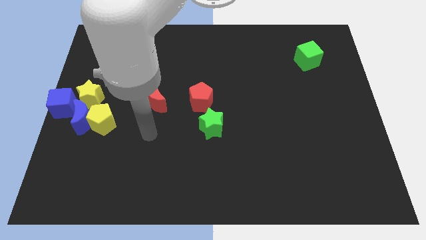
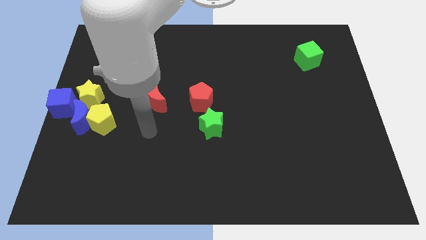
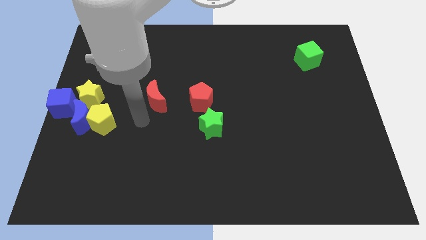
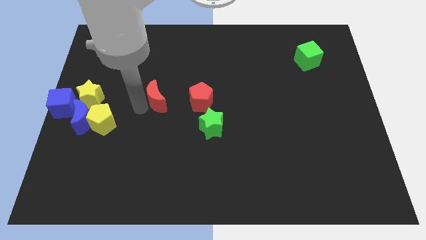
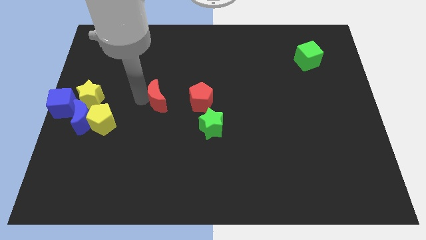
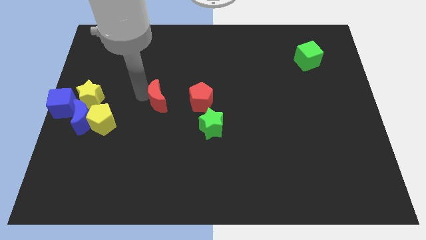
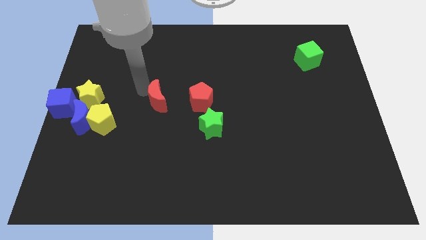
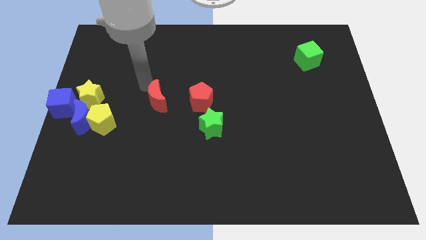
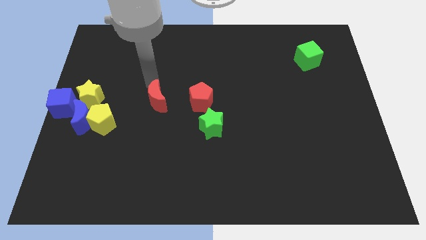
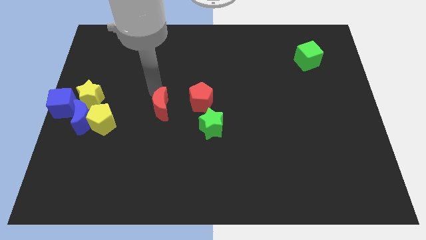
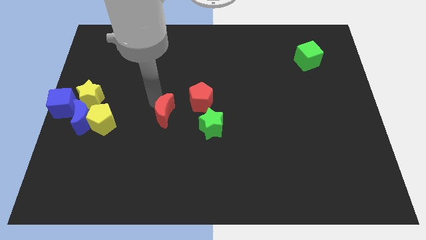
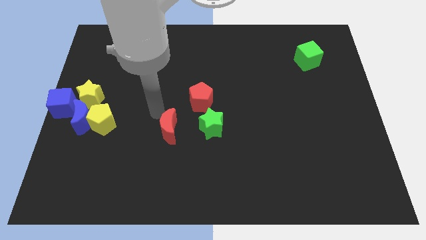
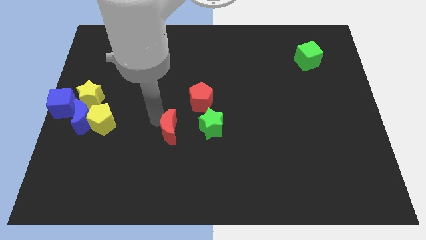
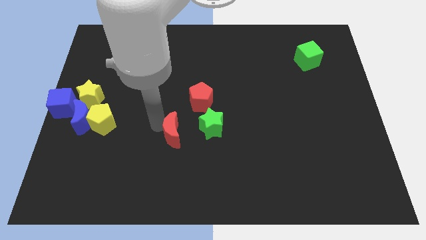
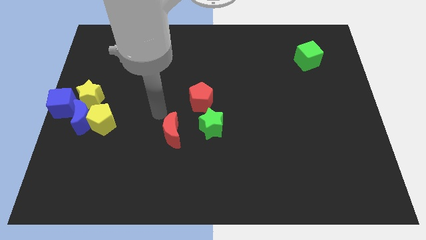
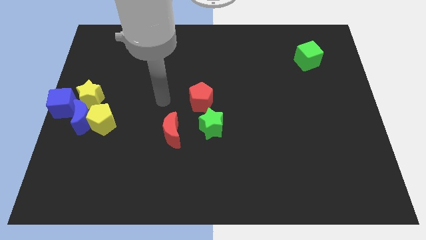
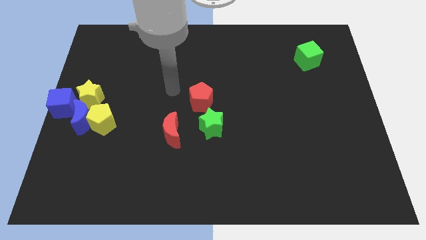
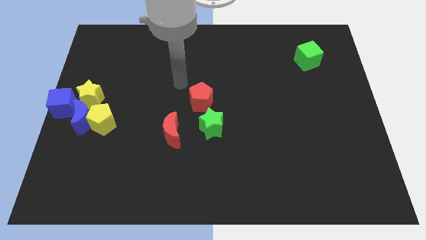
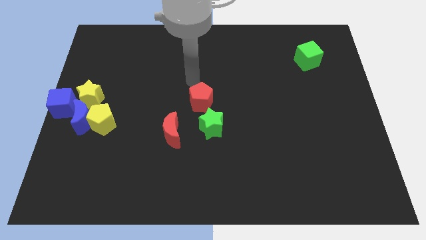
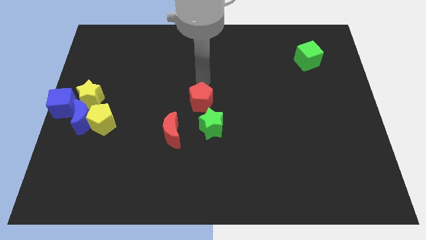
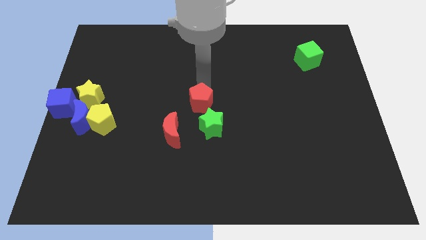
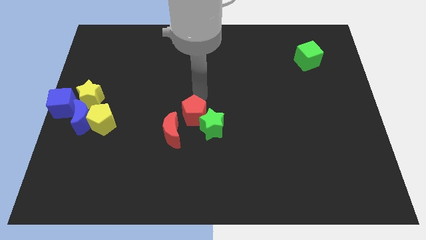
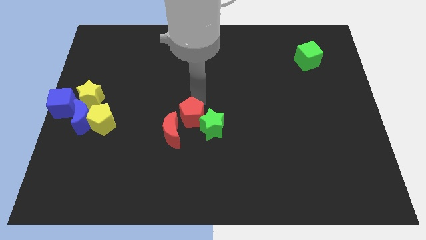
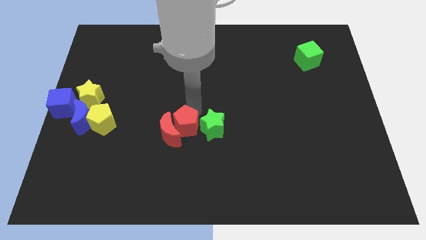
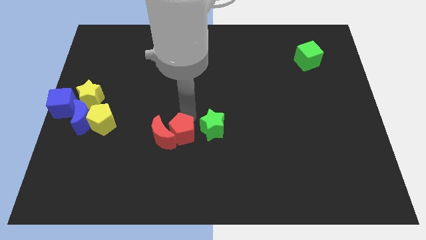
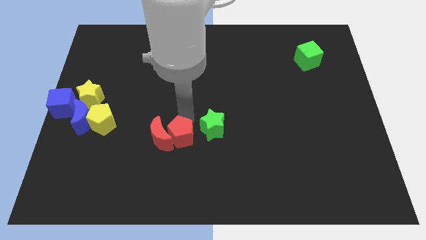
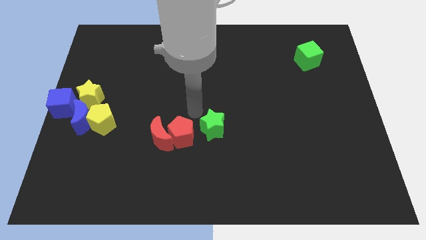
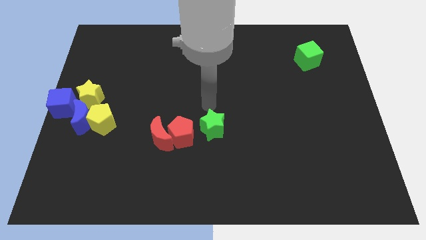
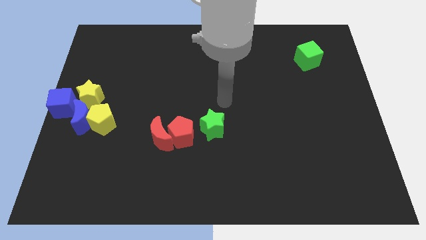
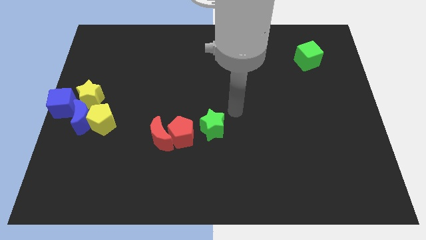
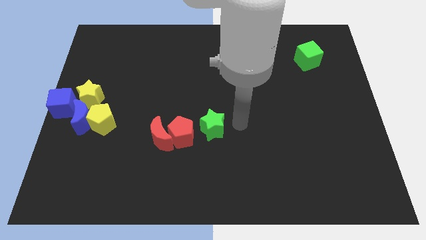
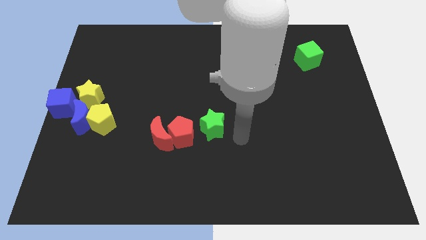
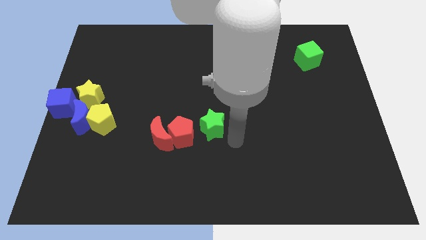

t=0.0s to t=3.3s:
move the red blocks to the left of the green star

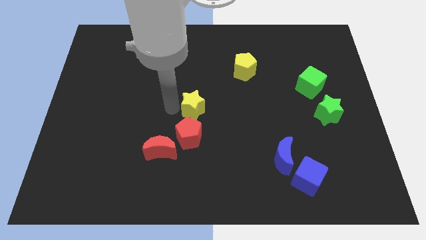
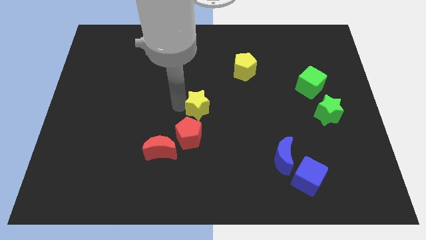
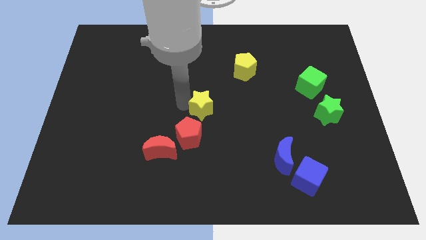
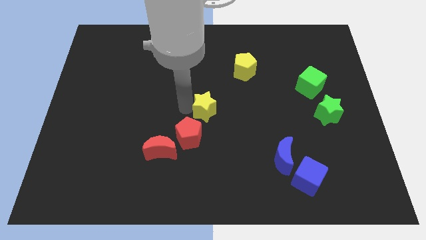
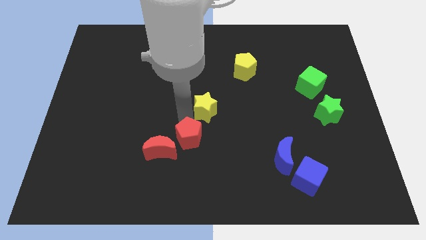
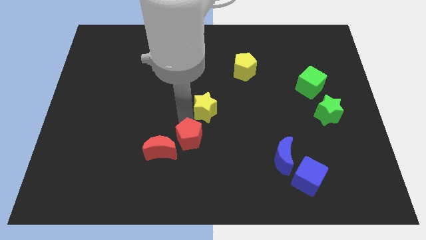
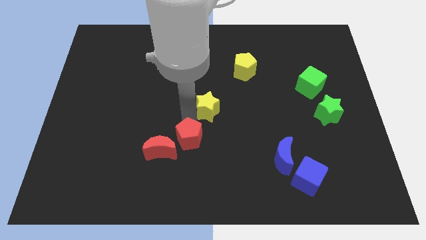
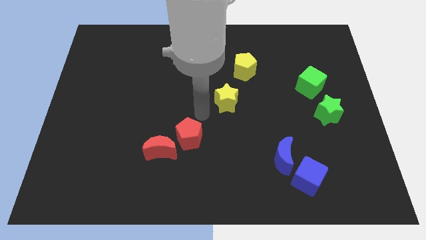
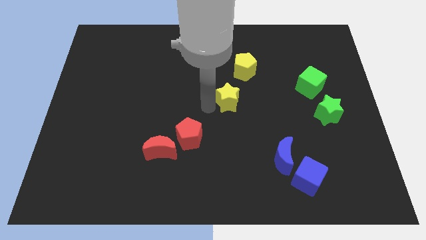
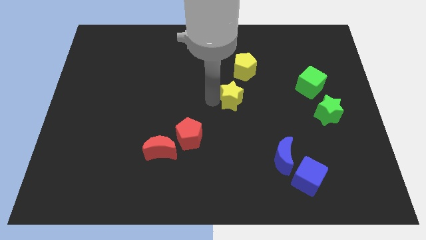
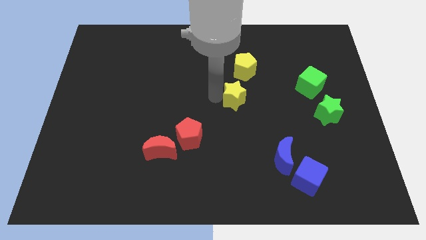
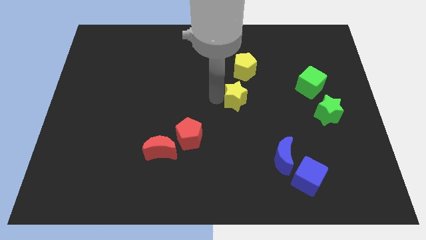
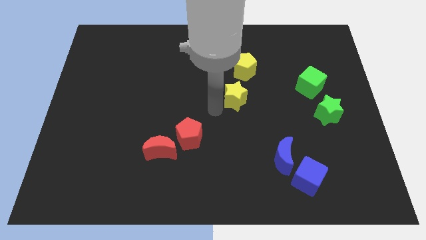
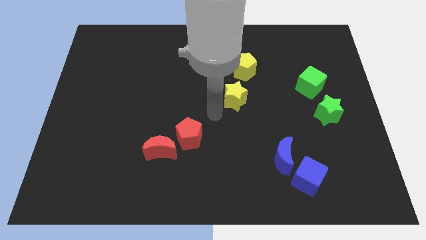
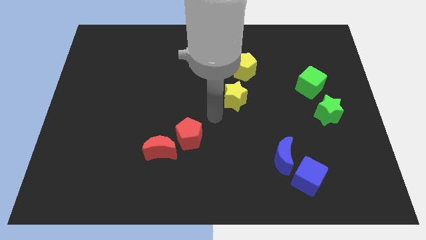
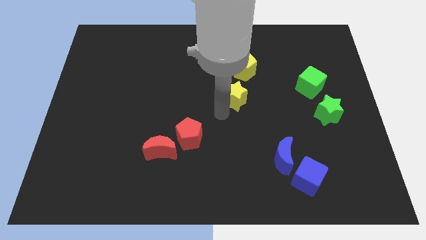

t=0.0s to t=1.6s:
slide the yellow star away from the red pentagon

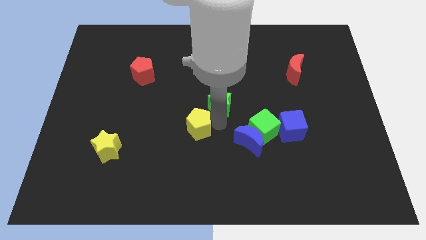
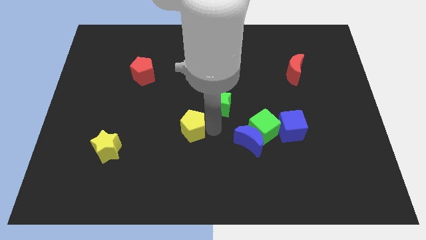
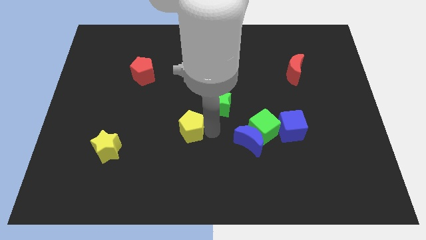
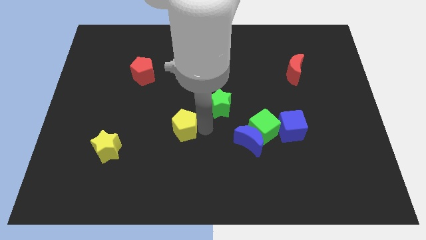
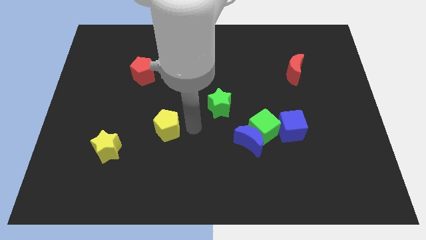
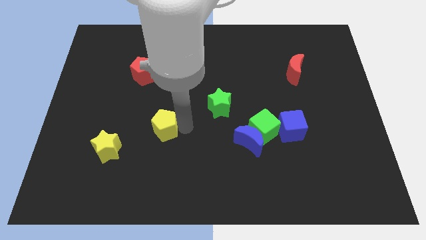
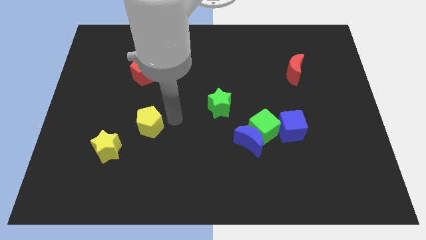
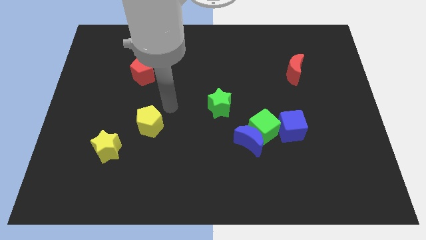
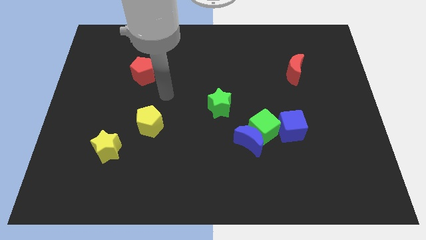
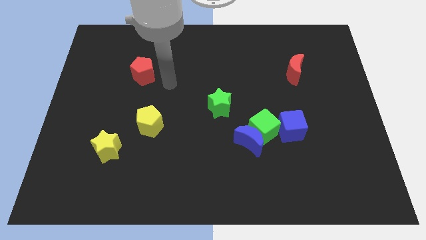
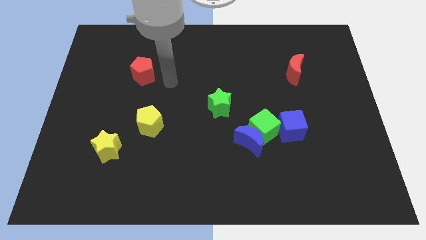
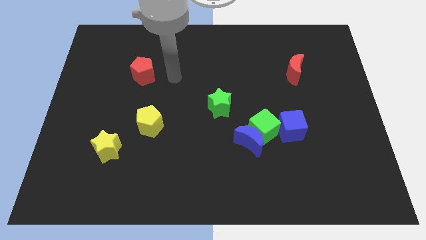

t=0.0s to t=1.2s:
place the yellow penatgon diagonally right to the yellow star

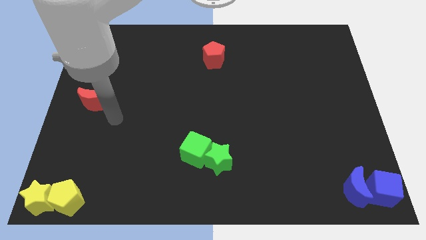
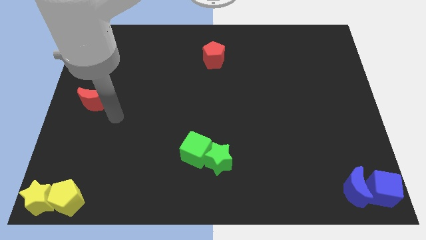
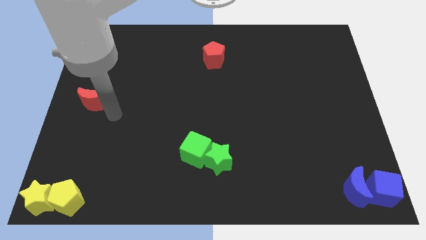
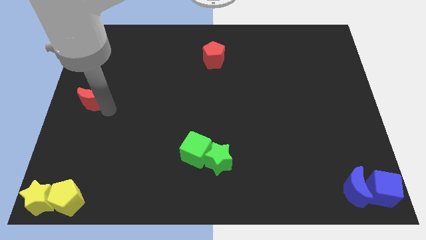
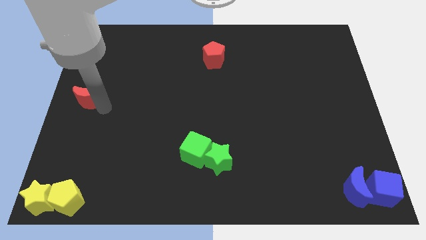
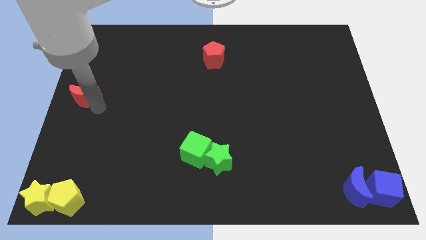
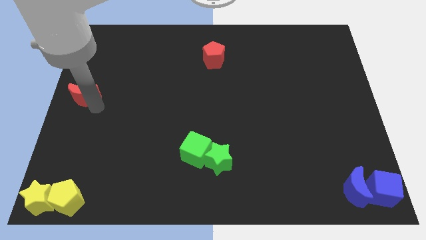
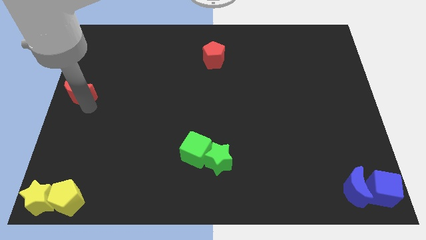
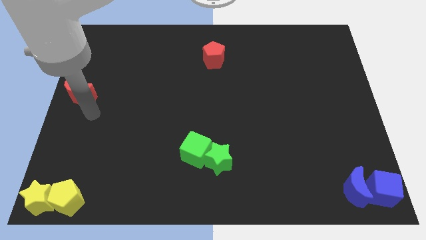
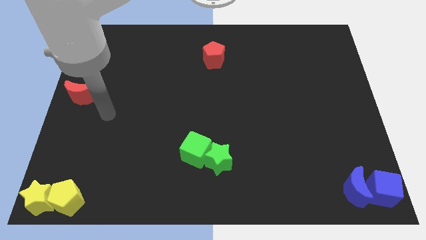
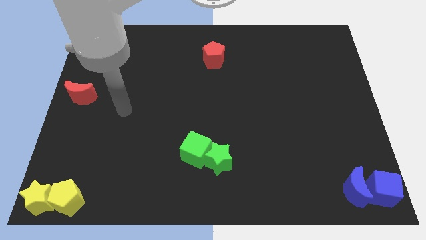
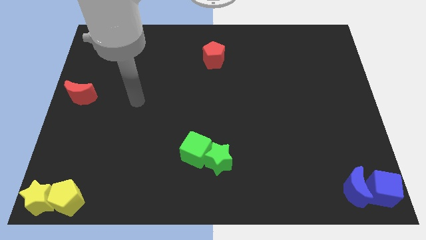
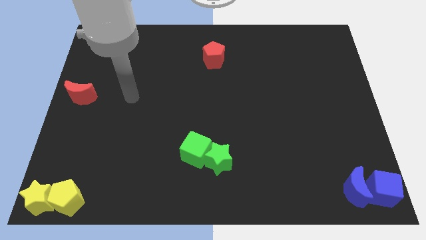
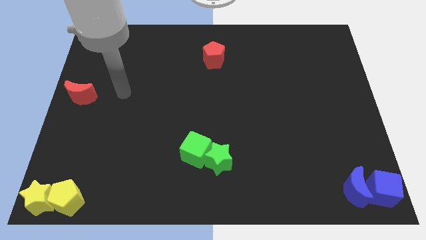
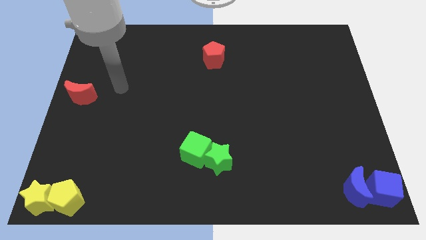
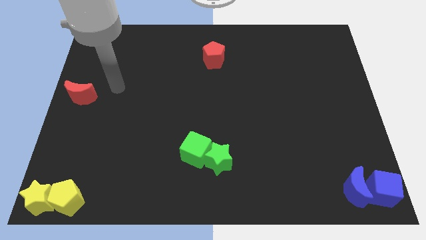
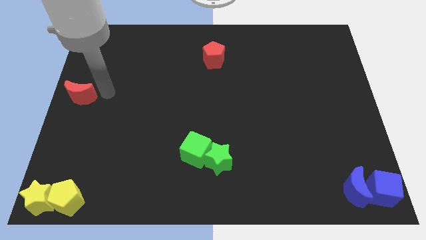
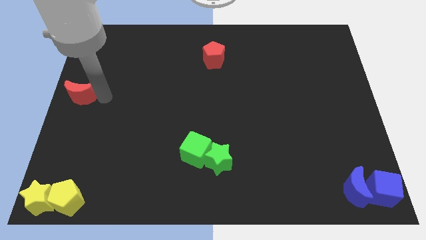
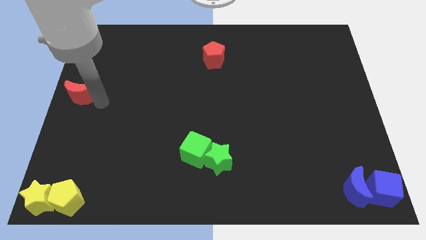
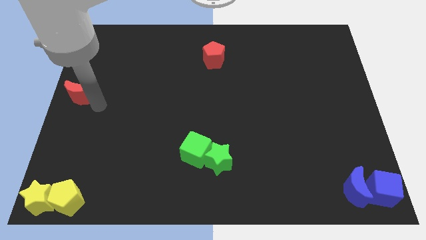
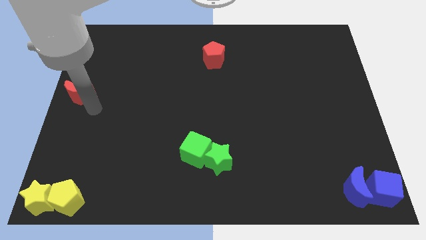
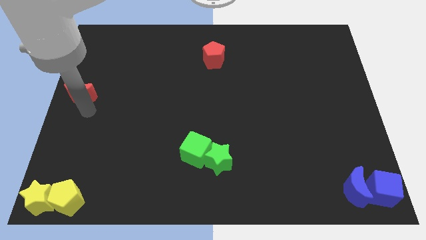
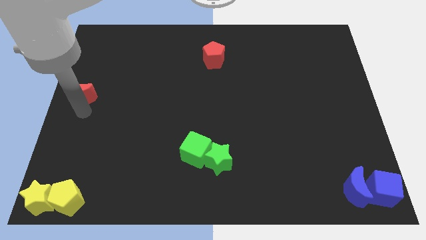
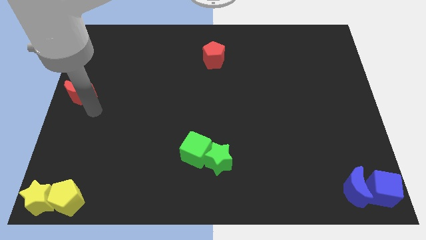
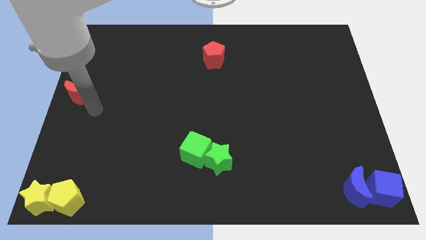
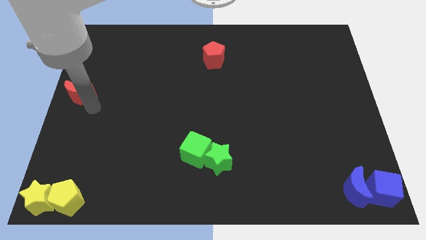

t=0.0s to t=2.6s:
place the red moon to the middle left of the board

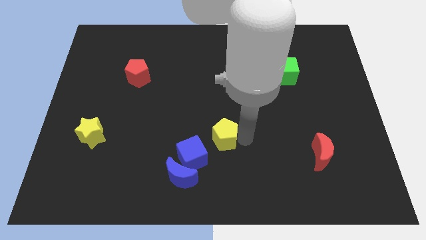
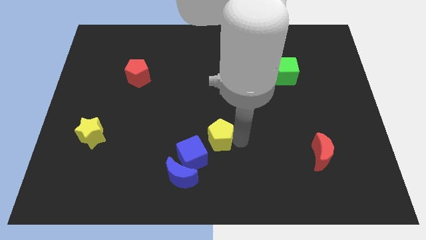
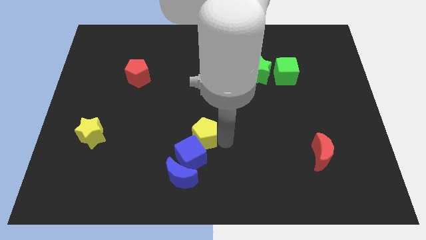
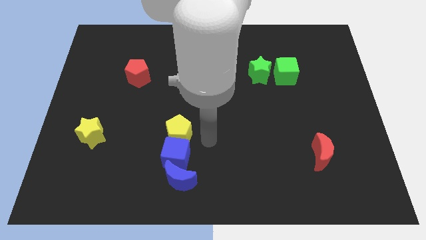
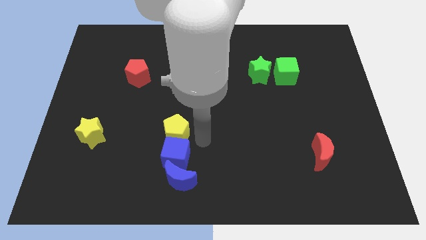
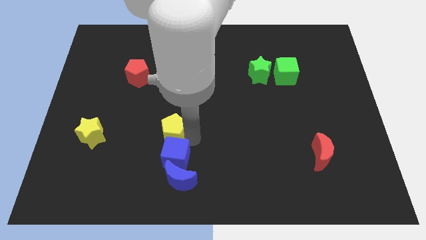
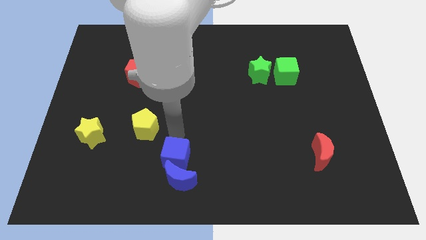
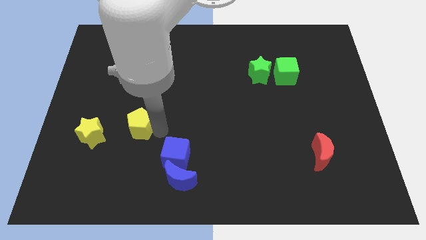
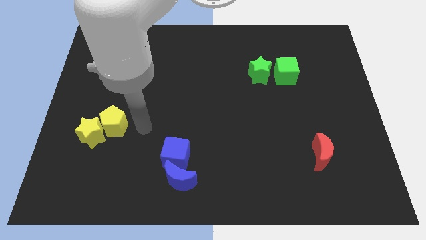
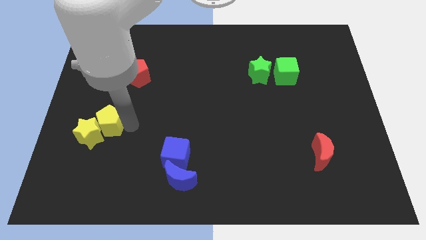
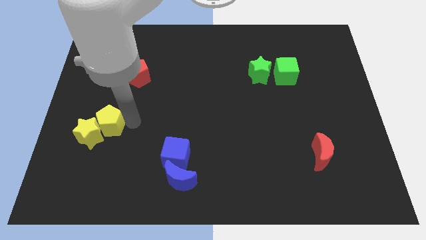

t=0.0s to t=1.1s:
move yellow pentagon into yellow star
